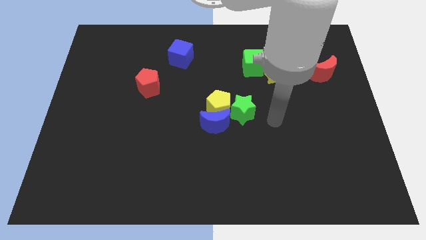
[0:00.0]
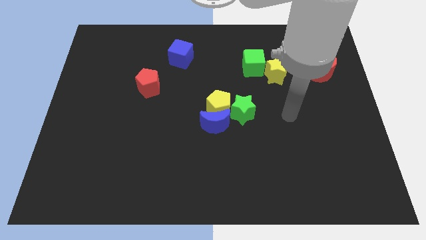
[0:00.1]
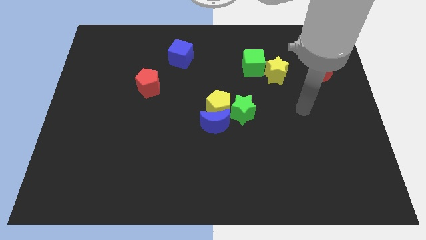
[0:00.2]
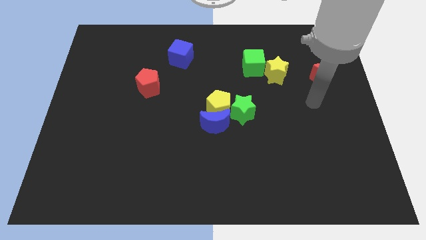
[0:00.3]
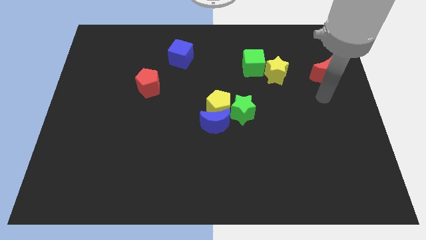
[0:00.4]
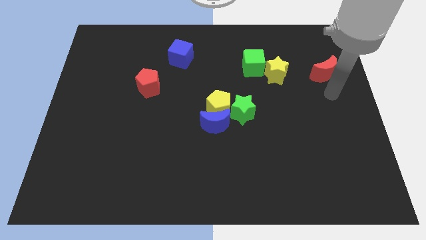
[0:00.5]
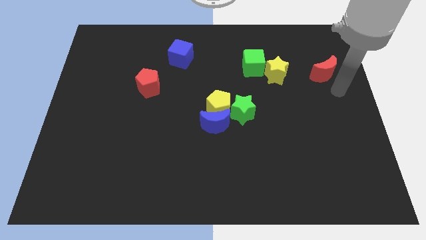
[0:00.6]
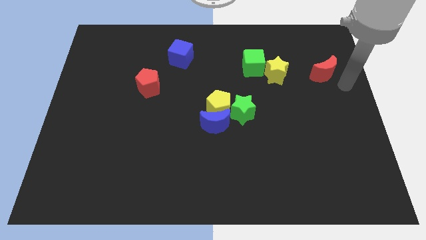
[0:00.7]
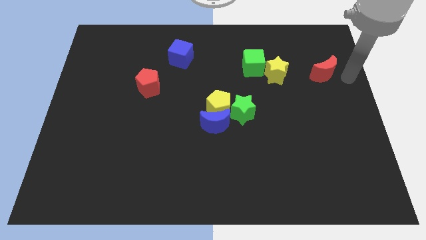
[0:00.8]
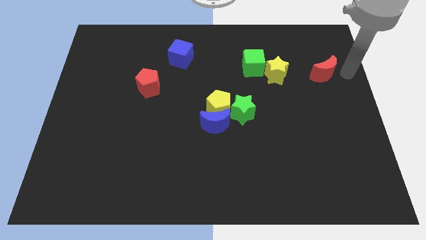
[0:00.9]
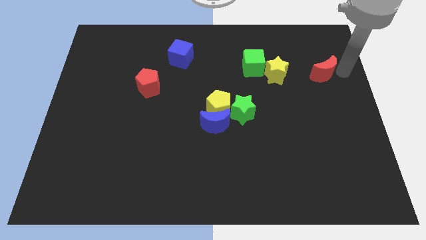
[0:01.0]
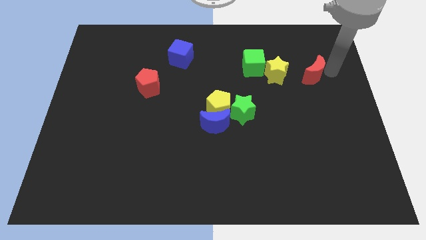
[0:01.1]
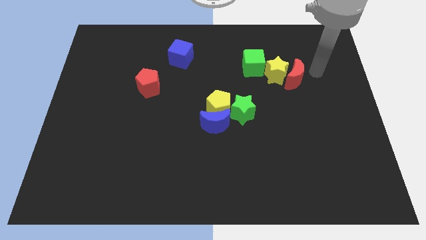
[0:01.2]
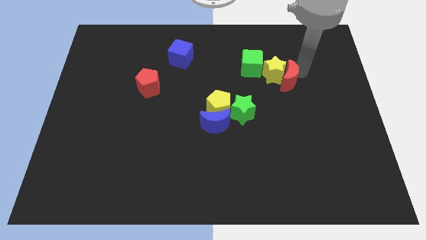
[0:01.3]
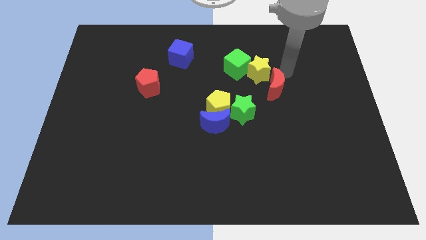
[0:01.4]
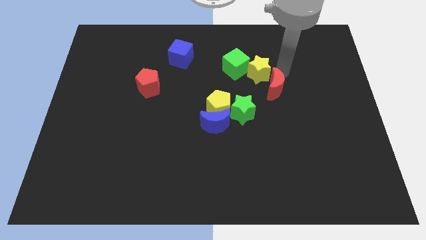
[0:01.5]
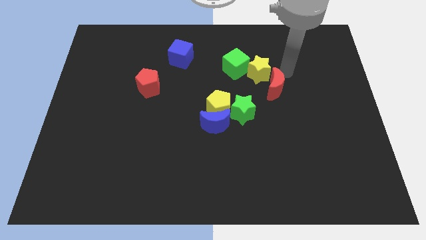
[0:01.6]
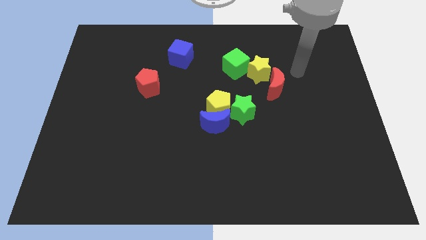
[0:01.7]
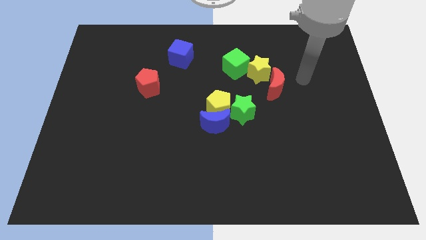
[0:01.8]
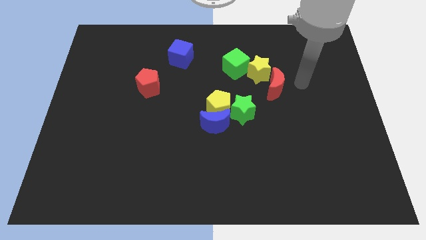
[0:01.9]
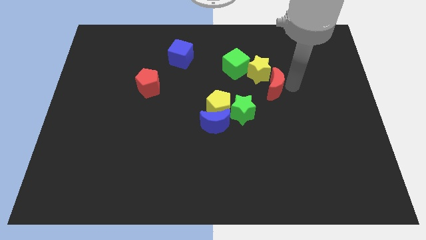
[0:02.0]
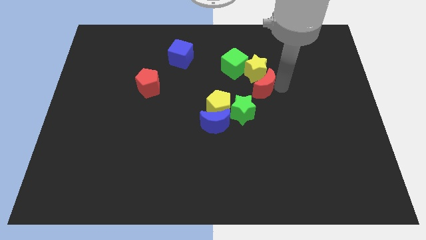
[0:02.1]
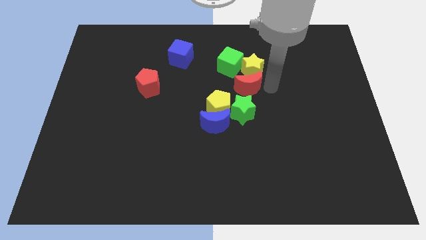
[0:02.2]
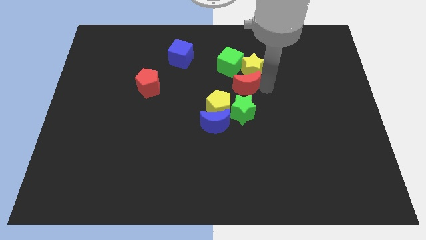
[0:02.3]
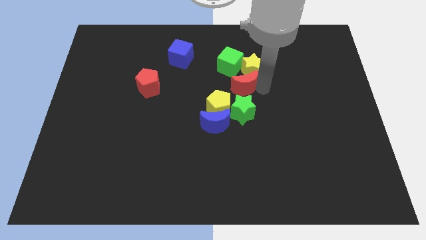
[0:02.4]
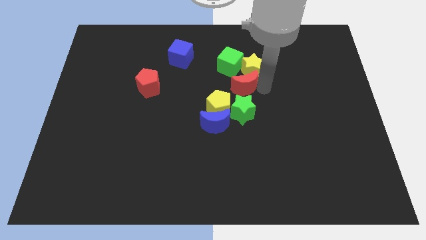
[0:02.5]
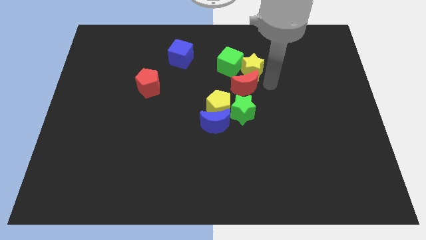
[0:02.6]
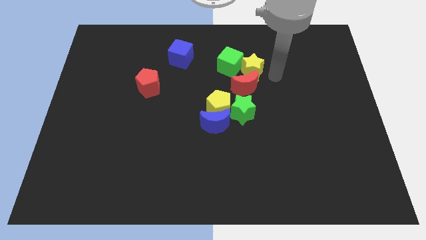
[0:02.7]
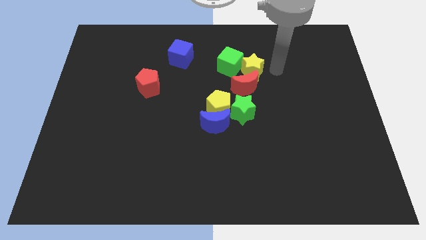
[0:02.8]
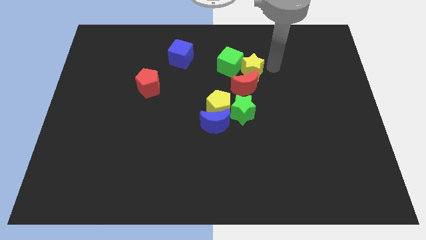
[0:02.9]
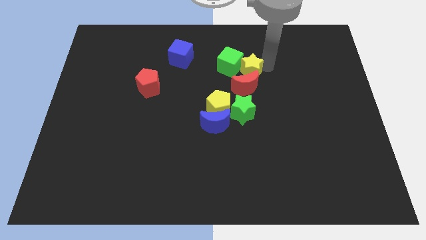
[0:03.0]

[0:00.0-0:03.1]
push red crescent to the top of green star

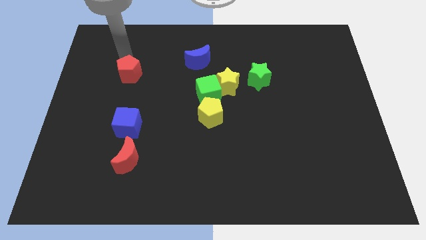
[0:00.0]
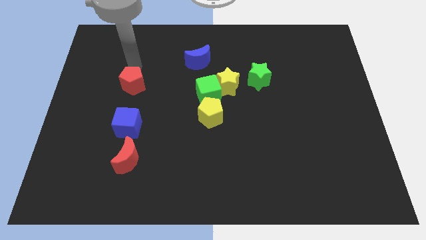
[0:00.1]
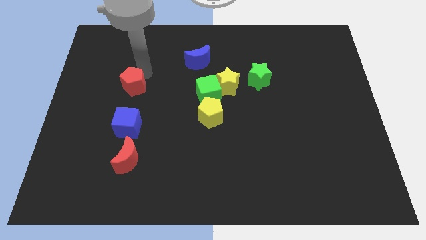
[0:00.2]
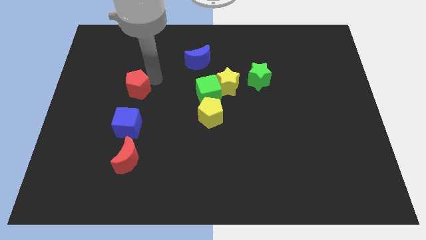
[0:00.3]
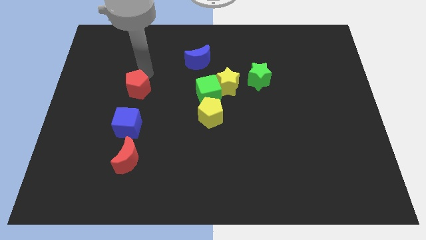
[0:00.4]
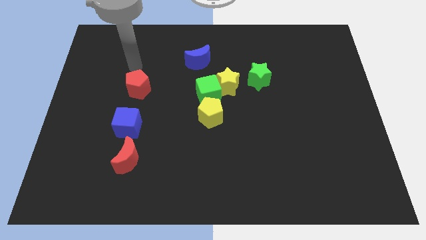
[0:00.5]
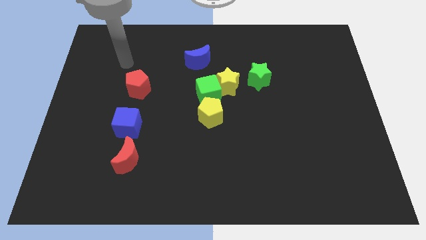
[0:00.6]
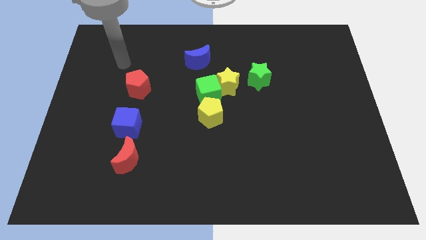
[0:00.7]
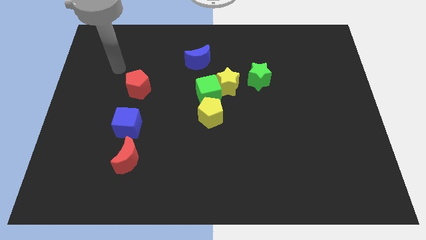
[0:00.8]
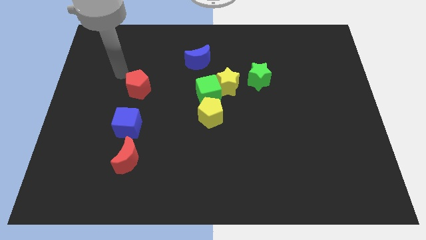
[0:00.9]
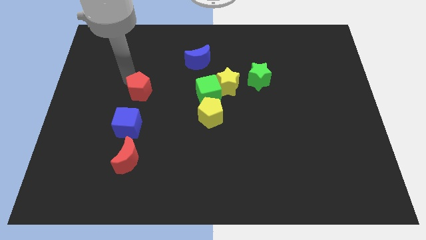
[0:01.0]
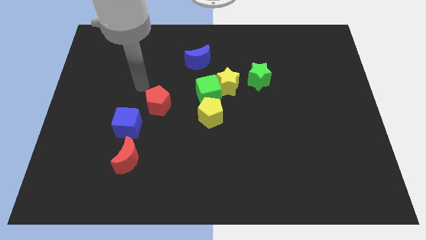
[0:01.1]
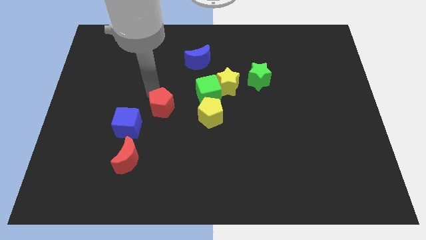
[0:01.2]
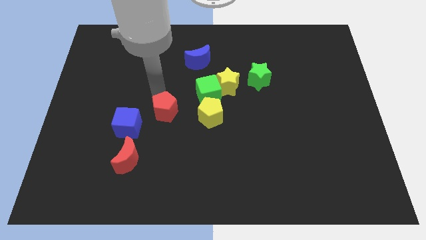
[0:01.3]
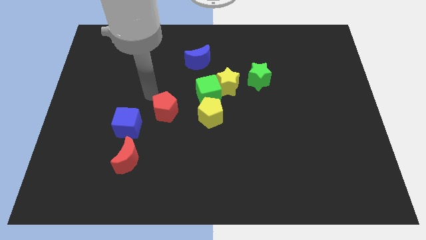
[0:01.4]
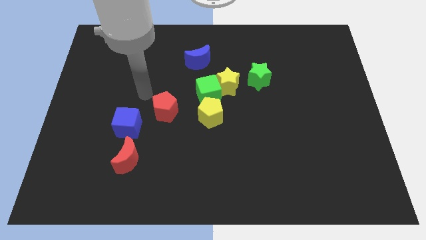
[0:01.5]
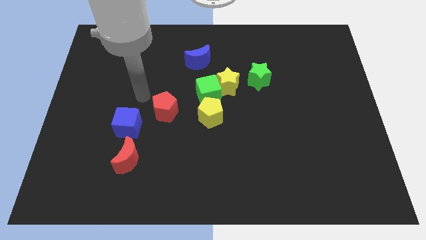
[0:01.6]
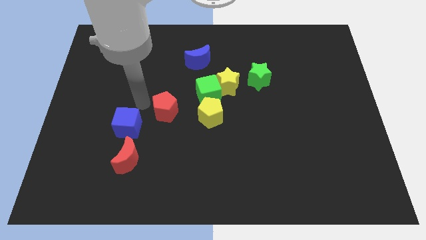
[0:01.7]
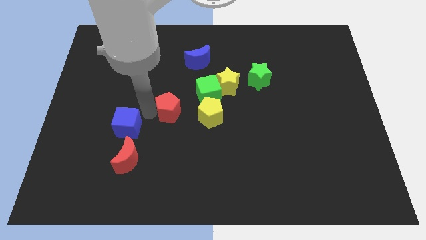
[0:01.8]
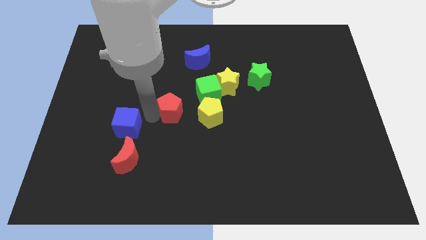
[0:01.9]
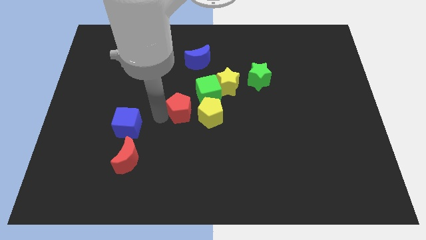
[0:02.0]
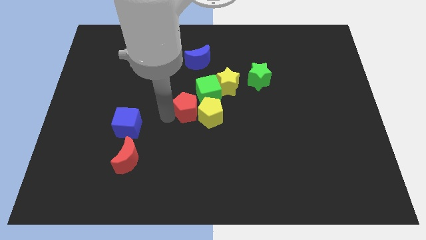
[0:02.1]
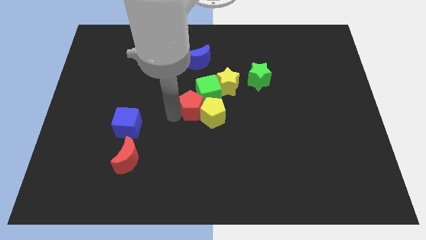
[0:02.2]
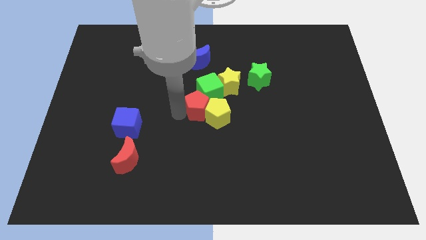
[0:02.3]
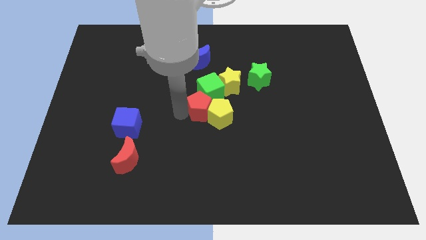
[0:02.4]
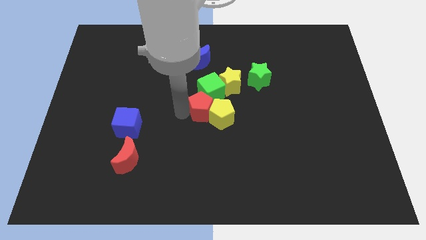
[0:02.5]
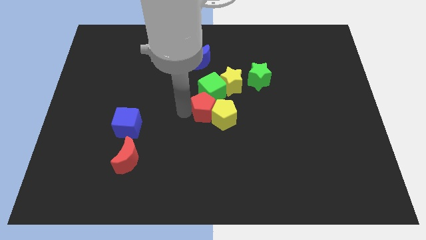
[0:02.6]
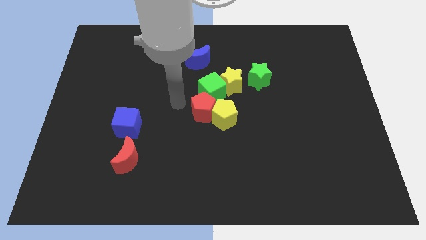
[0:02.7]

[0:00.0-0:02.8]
move red pentagon into yellow pentagon

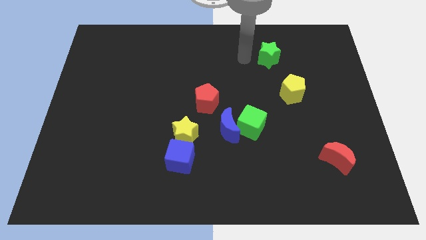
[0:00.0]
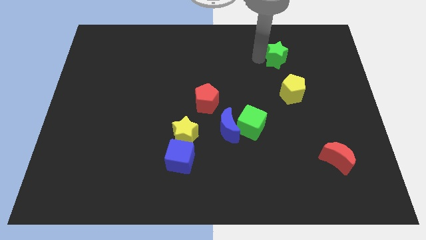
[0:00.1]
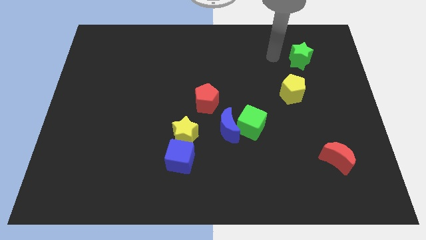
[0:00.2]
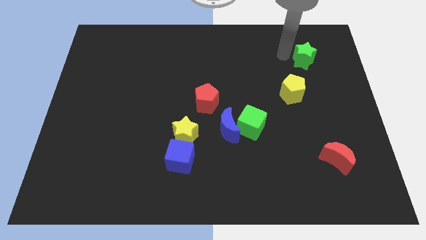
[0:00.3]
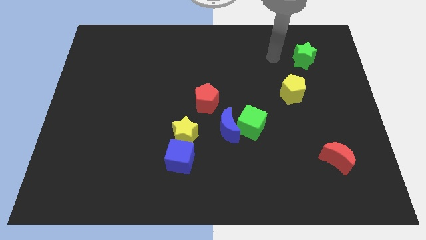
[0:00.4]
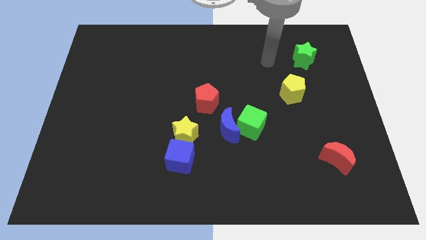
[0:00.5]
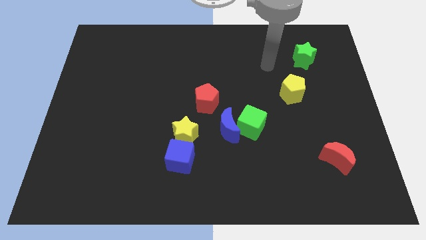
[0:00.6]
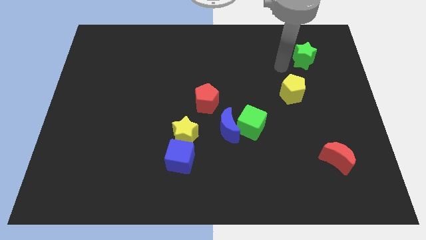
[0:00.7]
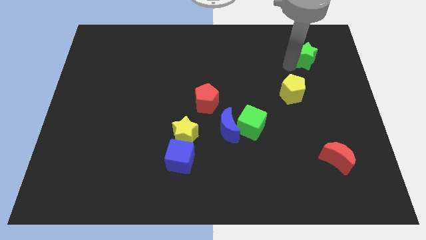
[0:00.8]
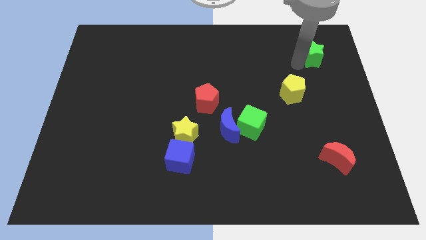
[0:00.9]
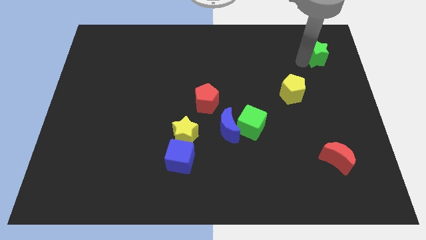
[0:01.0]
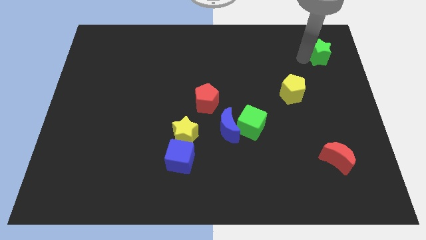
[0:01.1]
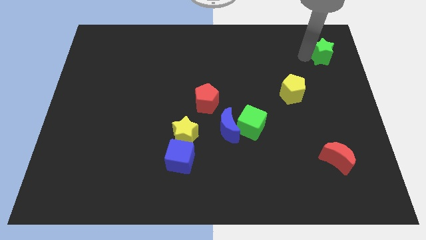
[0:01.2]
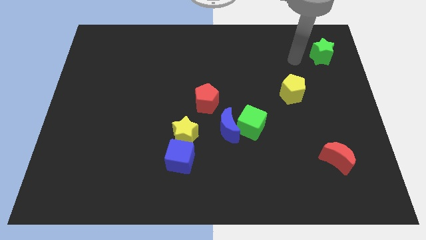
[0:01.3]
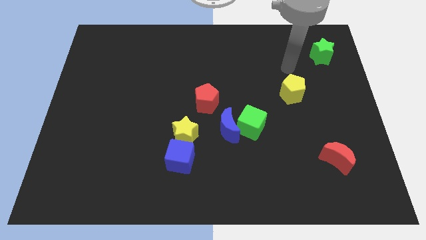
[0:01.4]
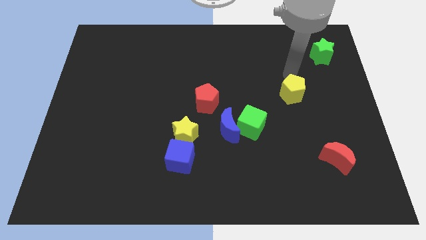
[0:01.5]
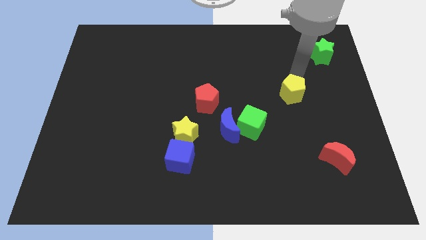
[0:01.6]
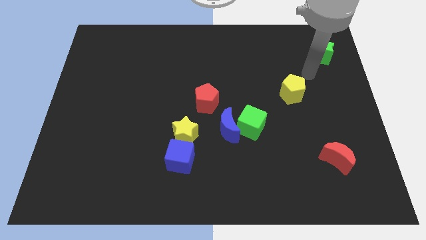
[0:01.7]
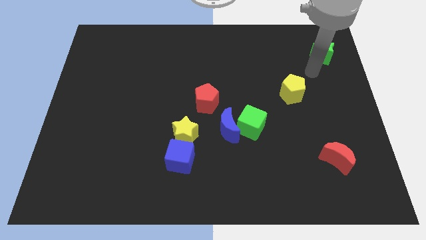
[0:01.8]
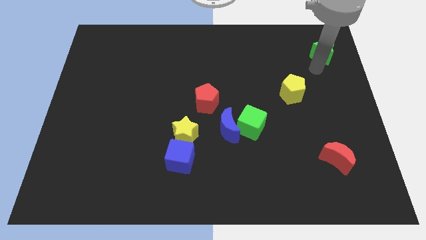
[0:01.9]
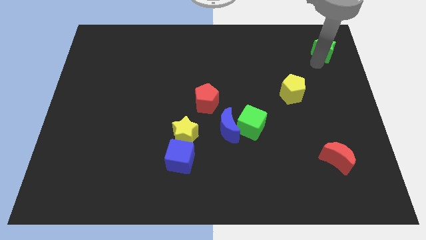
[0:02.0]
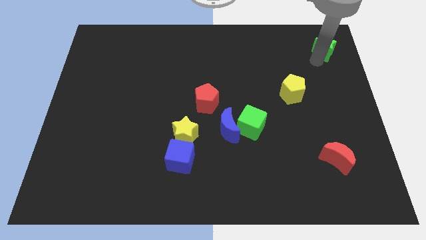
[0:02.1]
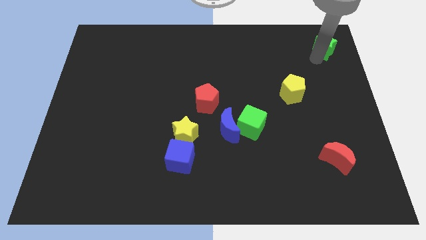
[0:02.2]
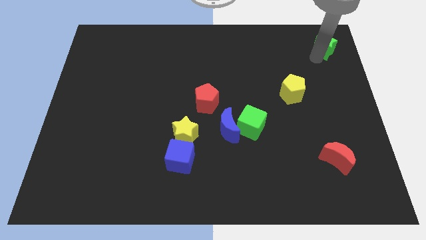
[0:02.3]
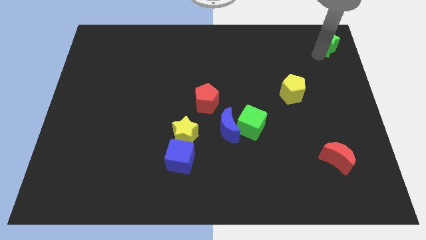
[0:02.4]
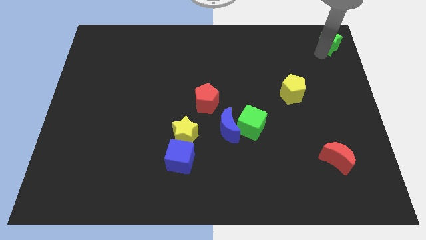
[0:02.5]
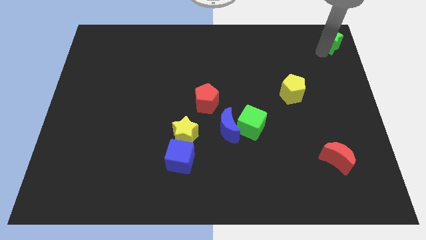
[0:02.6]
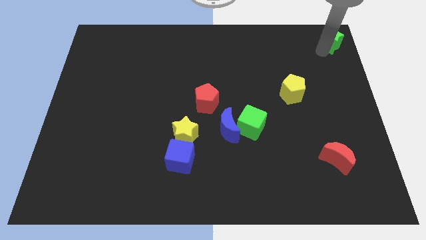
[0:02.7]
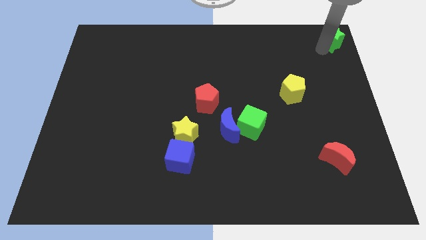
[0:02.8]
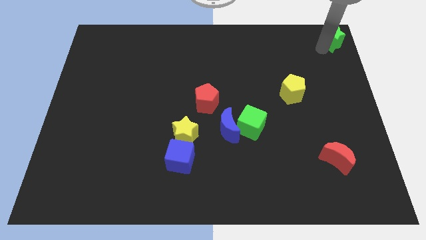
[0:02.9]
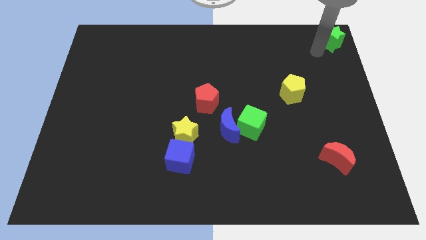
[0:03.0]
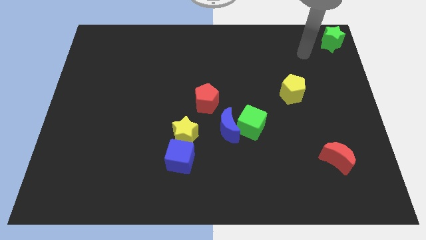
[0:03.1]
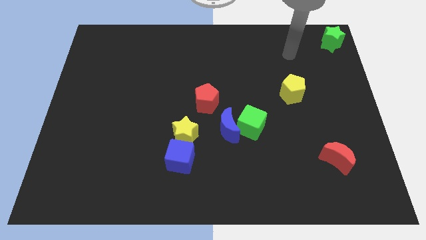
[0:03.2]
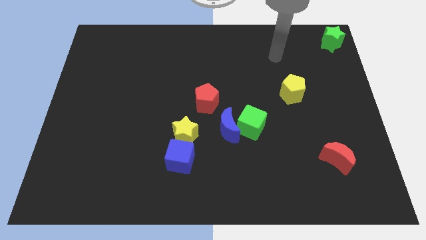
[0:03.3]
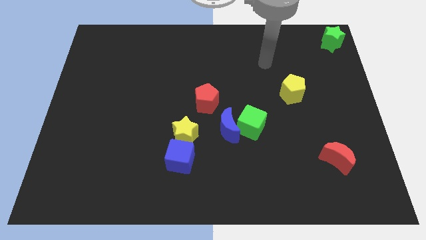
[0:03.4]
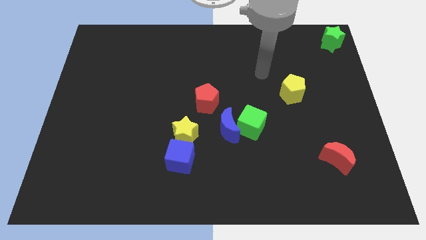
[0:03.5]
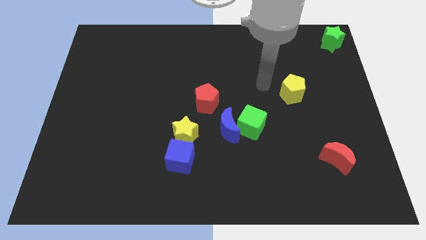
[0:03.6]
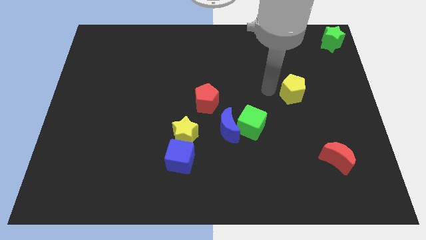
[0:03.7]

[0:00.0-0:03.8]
place the green star at the top right corner of the board
